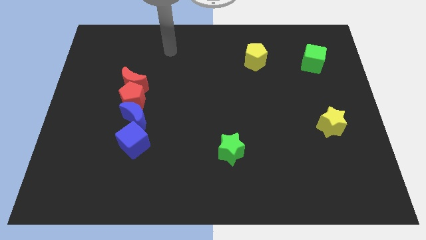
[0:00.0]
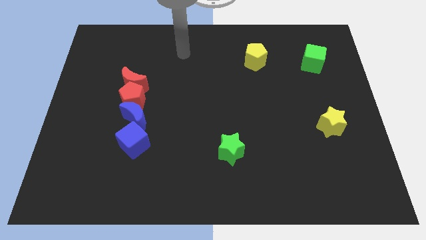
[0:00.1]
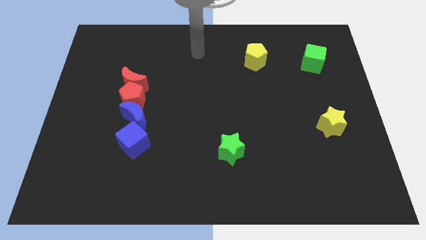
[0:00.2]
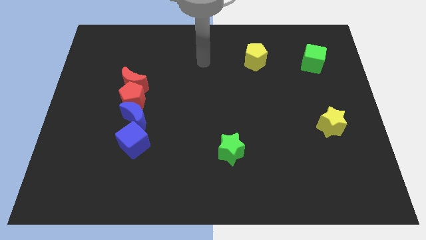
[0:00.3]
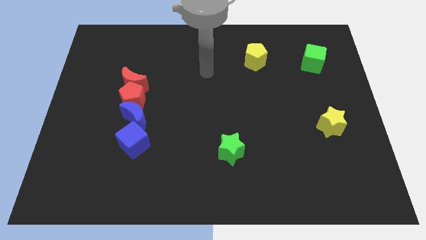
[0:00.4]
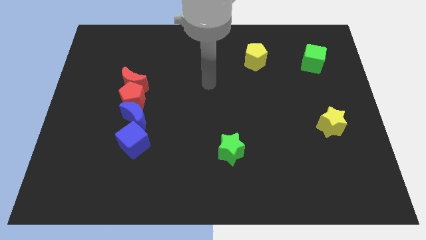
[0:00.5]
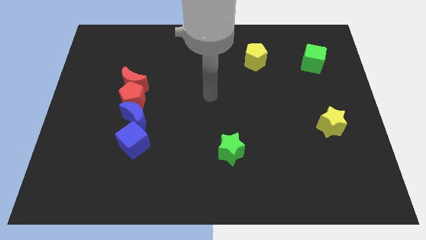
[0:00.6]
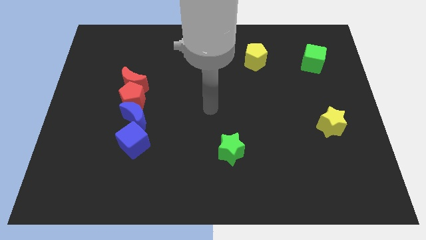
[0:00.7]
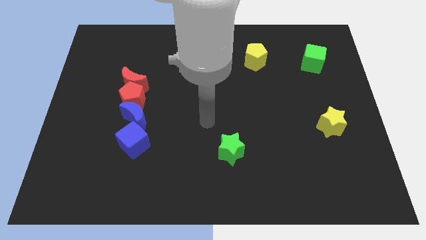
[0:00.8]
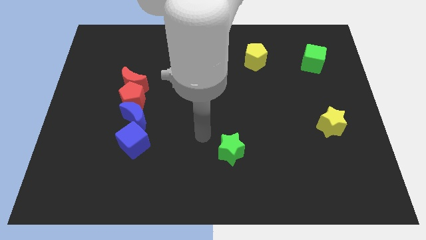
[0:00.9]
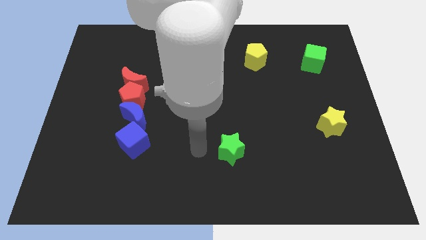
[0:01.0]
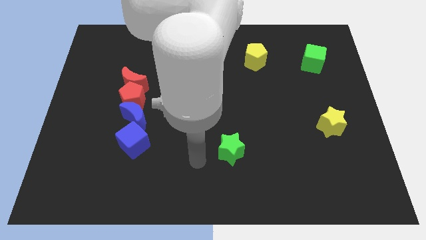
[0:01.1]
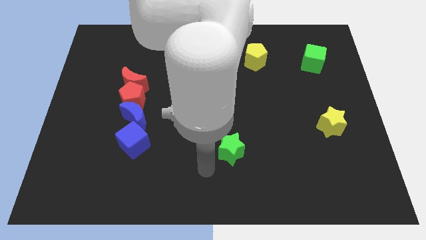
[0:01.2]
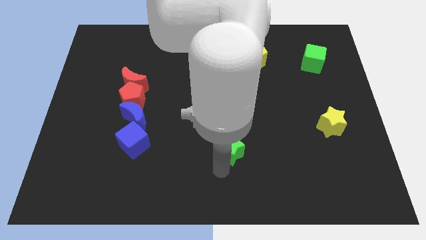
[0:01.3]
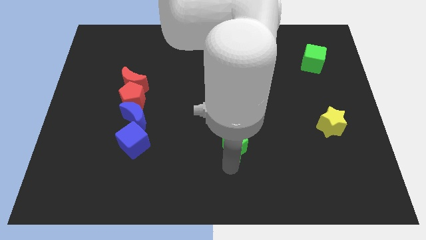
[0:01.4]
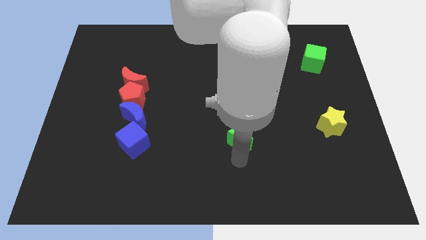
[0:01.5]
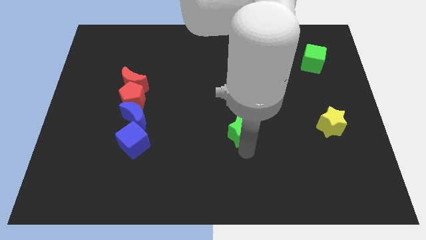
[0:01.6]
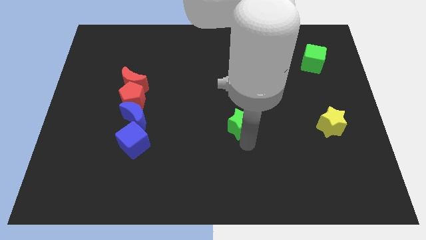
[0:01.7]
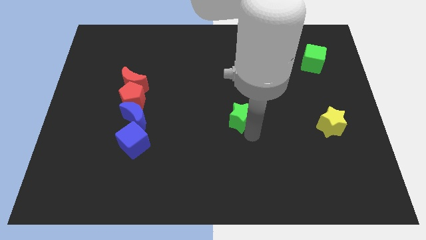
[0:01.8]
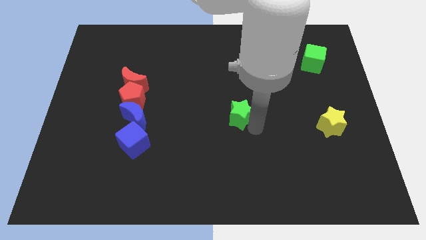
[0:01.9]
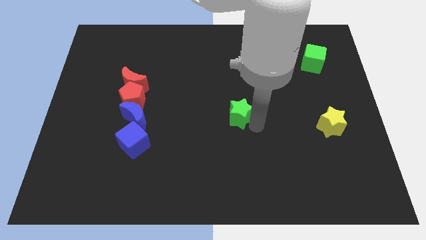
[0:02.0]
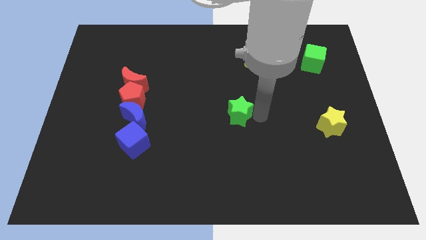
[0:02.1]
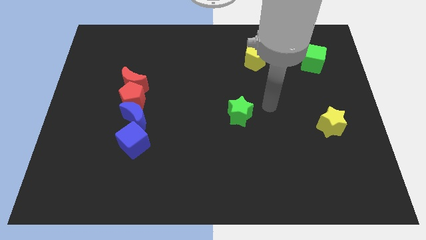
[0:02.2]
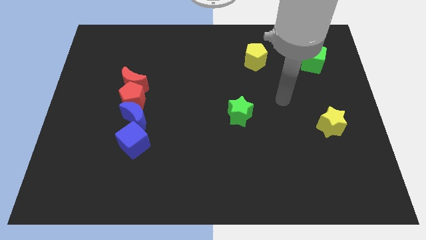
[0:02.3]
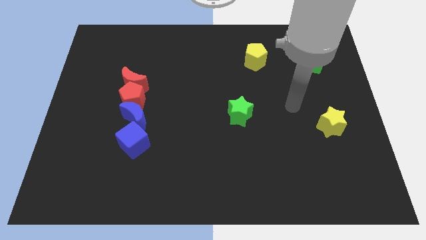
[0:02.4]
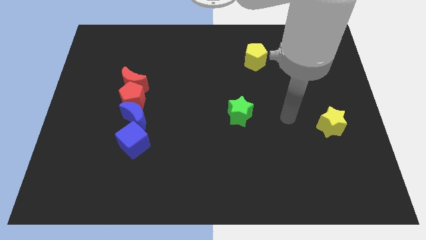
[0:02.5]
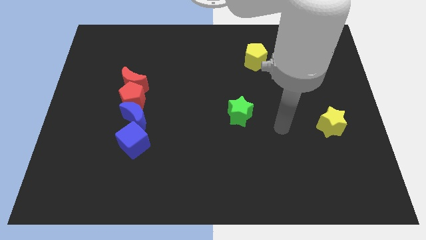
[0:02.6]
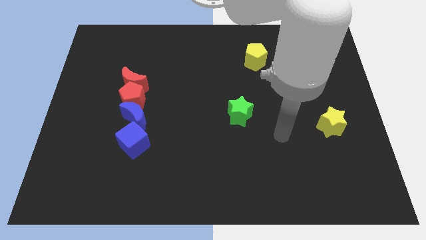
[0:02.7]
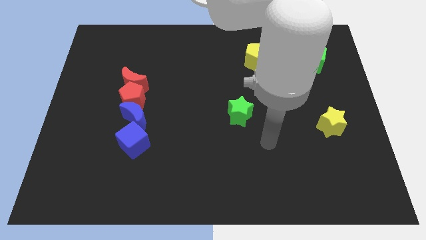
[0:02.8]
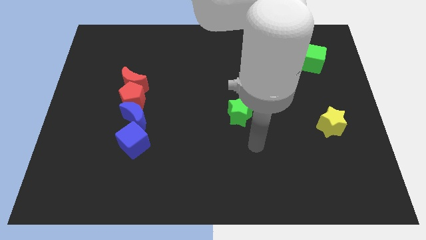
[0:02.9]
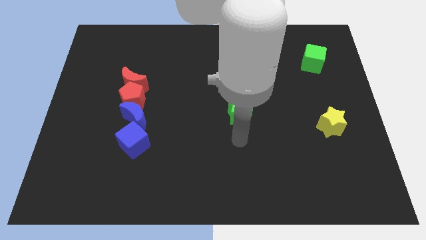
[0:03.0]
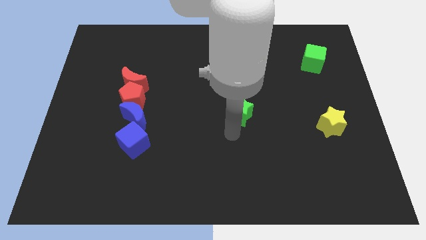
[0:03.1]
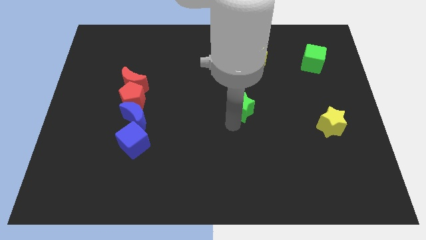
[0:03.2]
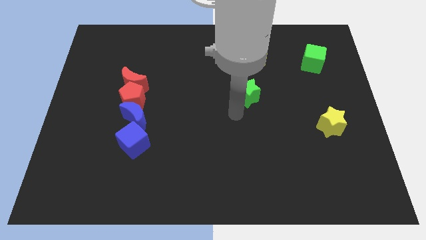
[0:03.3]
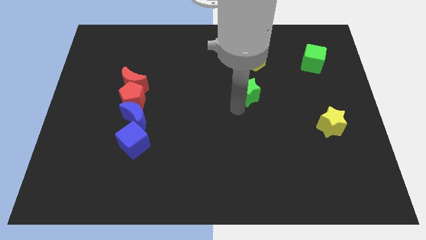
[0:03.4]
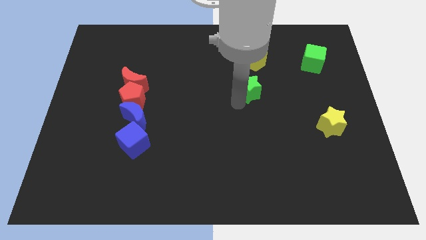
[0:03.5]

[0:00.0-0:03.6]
push the green star to the top left of the yellow star

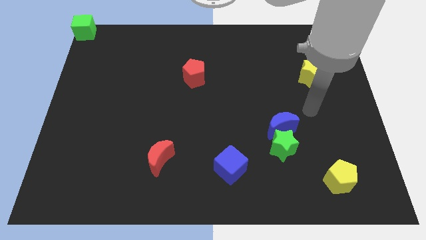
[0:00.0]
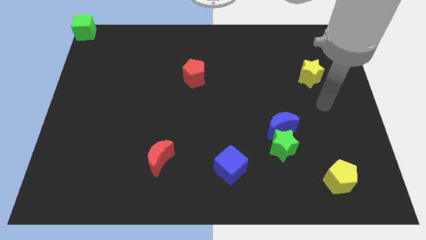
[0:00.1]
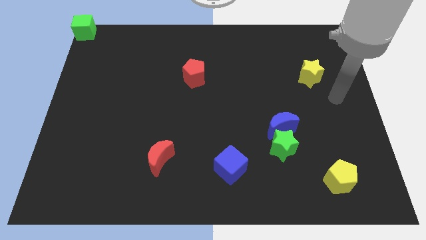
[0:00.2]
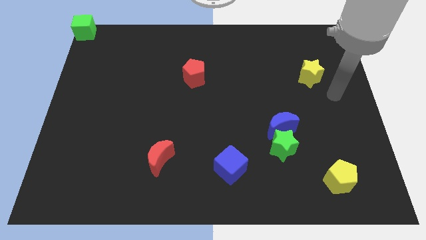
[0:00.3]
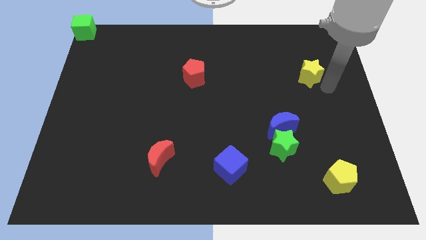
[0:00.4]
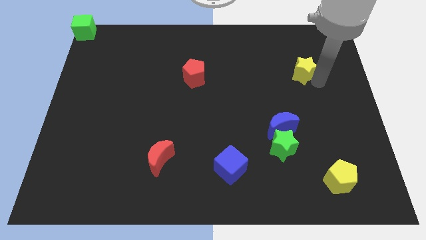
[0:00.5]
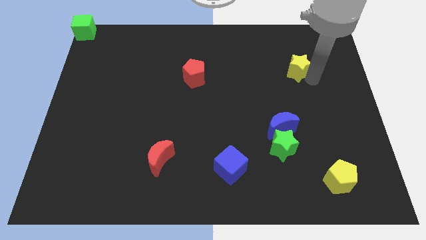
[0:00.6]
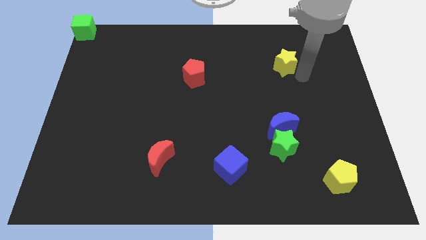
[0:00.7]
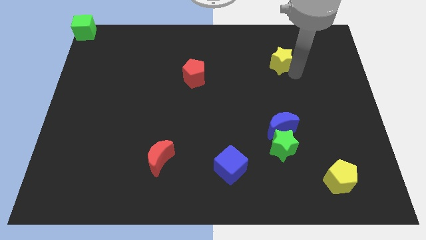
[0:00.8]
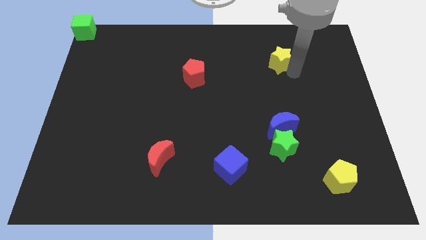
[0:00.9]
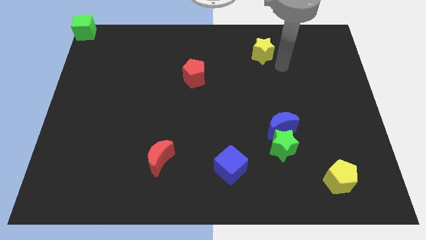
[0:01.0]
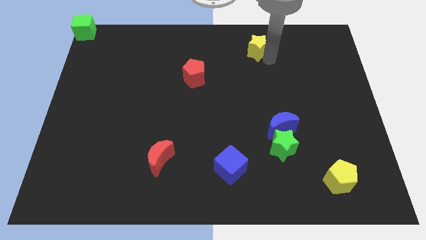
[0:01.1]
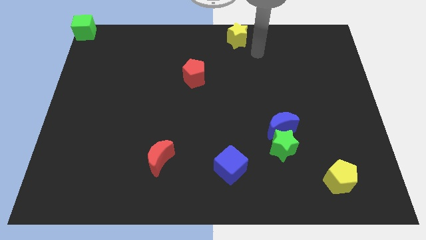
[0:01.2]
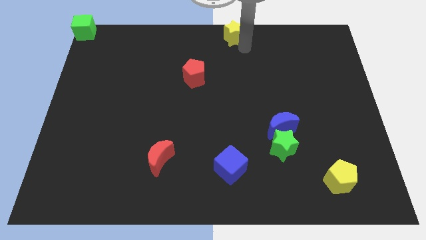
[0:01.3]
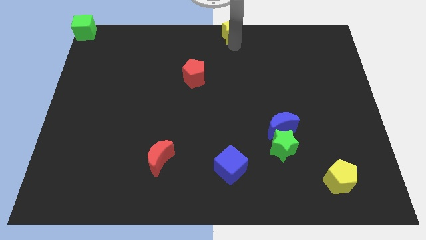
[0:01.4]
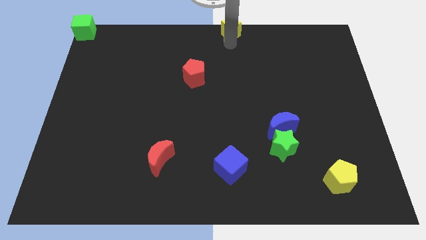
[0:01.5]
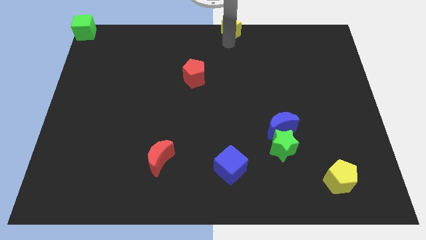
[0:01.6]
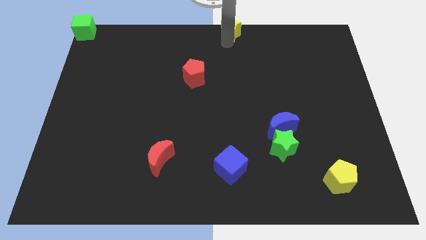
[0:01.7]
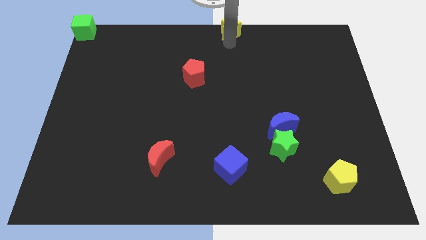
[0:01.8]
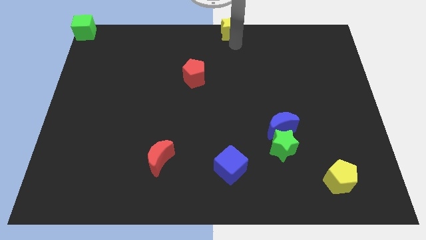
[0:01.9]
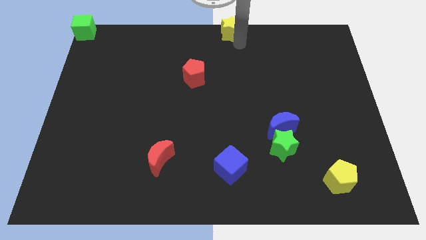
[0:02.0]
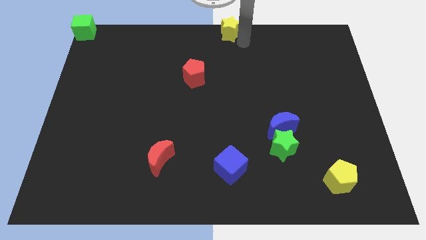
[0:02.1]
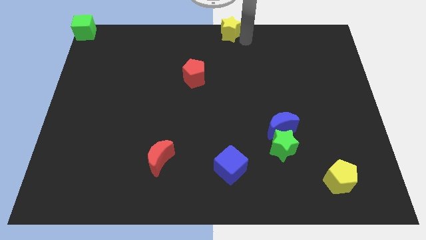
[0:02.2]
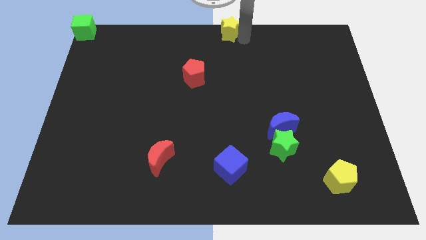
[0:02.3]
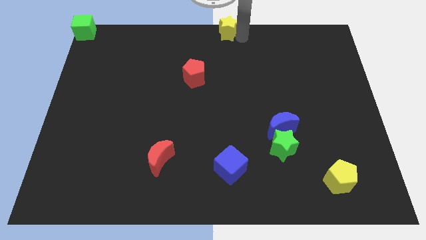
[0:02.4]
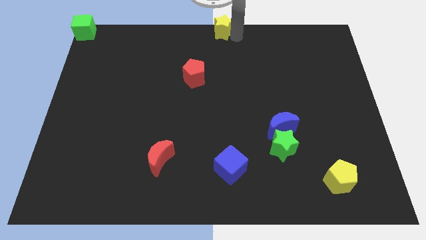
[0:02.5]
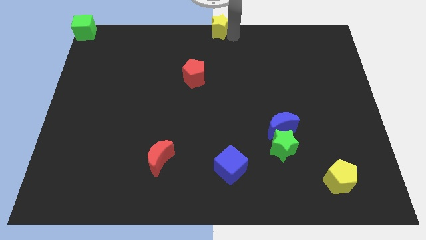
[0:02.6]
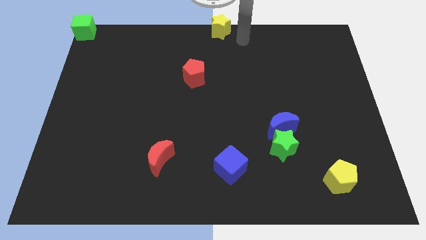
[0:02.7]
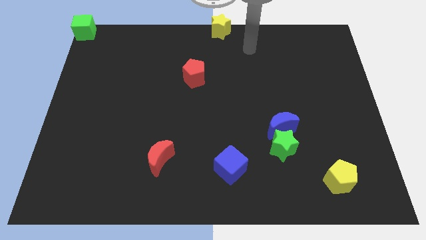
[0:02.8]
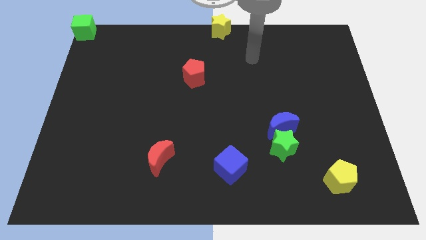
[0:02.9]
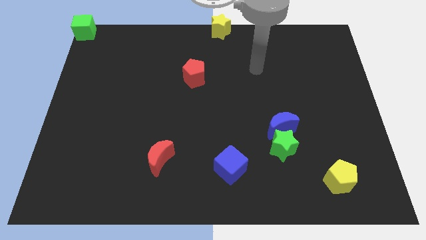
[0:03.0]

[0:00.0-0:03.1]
place the yellow star vertically above the blue cube

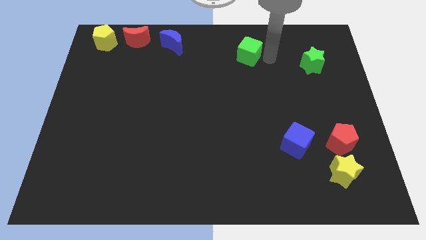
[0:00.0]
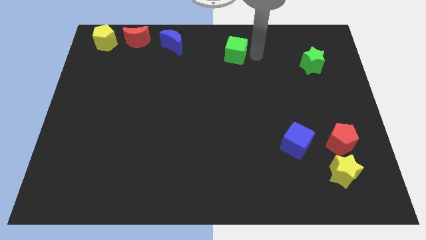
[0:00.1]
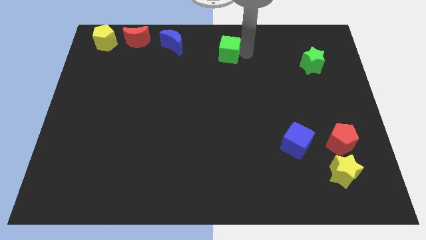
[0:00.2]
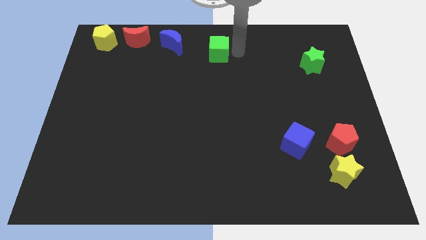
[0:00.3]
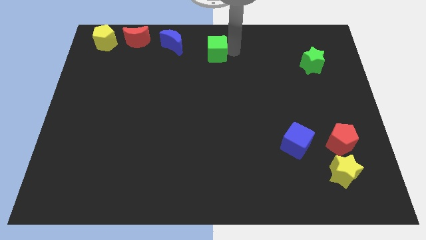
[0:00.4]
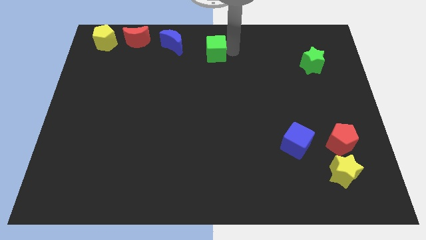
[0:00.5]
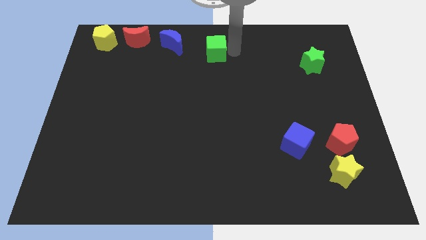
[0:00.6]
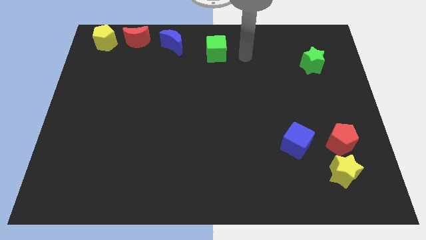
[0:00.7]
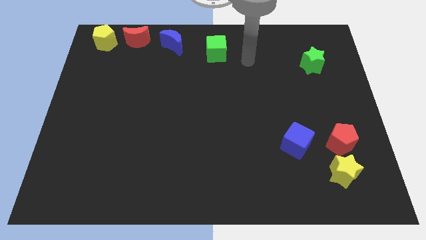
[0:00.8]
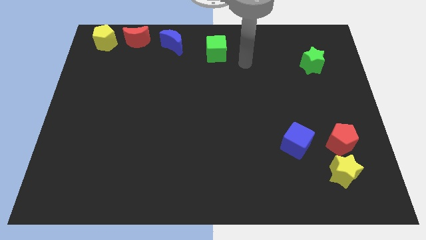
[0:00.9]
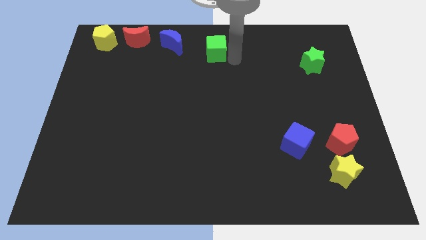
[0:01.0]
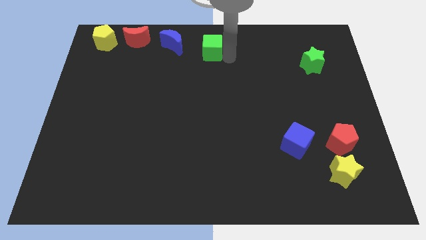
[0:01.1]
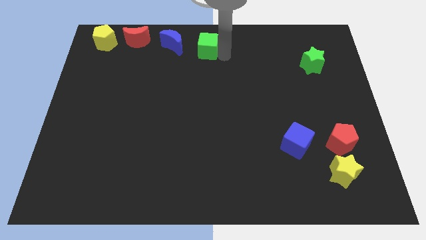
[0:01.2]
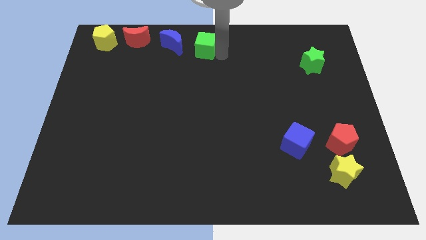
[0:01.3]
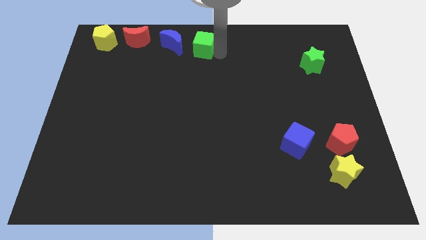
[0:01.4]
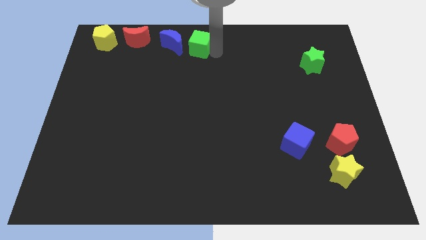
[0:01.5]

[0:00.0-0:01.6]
put the green cube right to the red moon

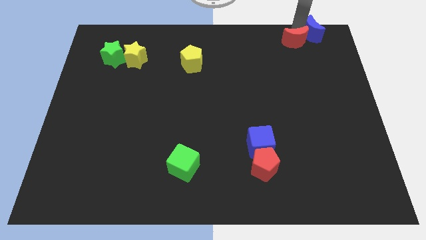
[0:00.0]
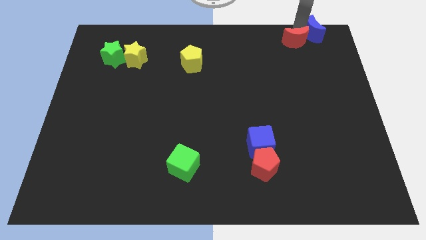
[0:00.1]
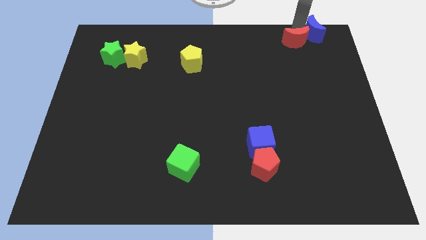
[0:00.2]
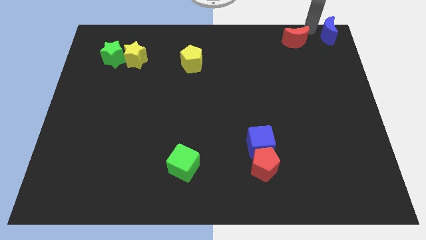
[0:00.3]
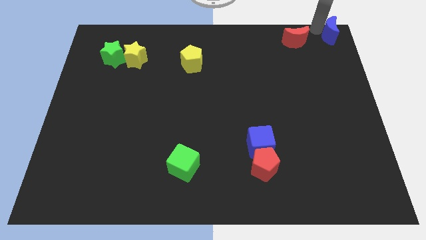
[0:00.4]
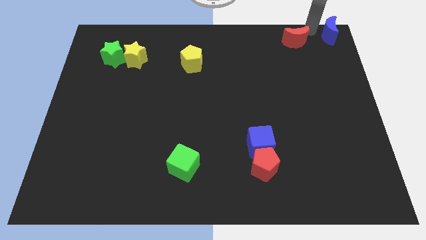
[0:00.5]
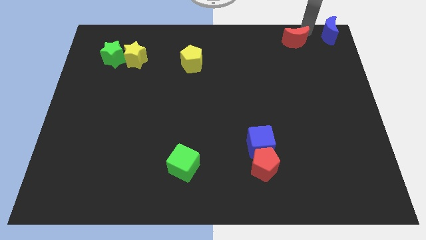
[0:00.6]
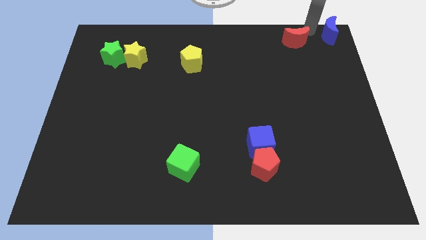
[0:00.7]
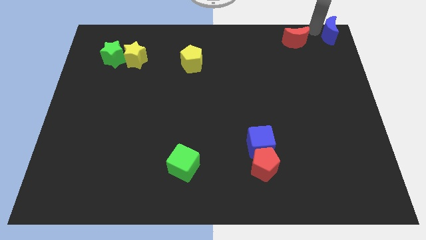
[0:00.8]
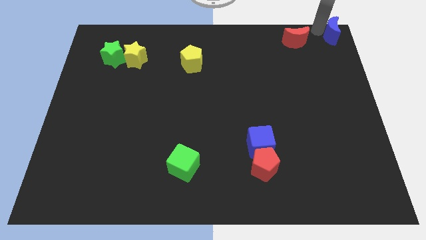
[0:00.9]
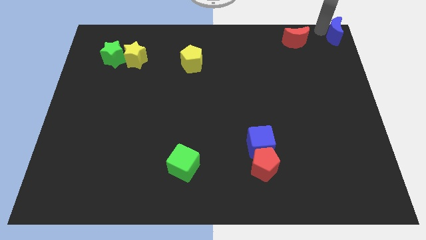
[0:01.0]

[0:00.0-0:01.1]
separate blue moon from red crescent
